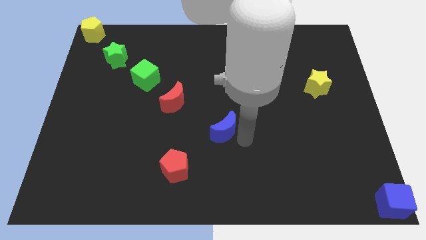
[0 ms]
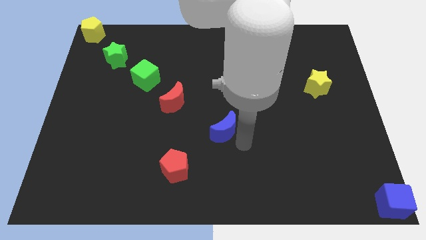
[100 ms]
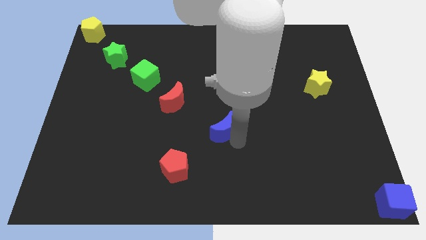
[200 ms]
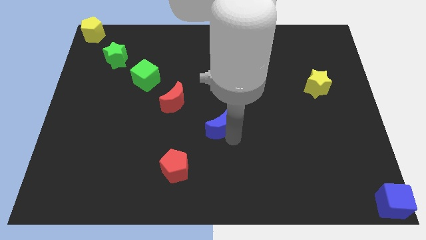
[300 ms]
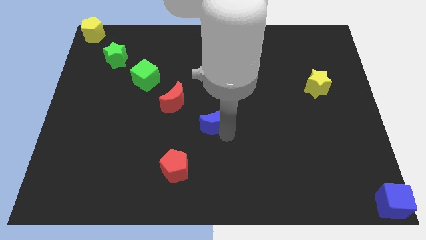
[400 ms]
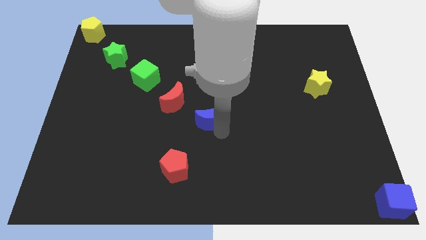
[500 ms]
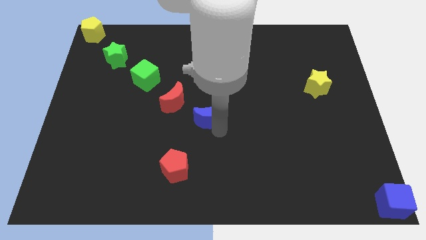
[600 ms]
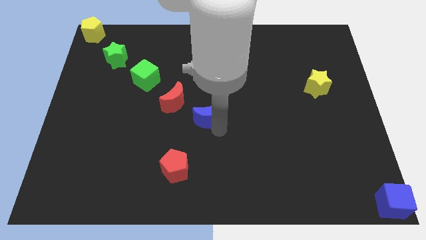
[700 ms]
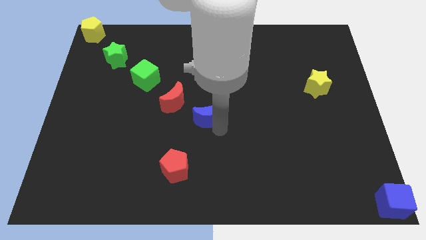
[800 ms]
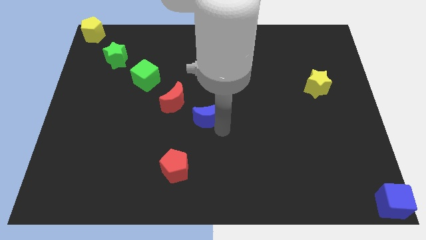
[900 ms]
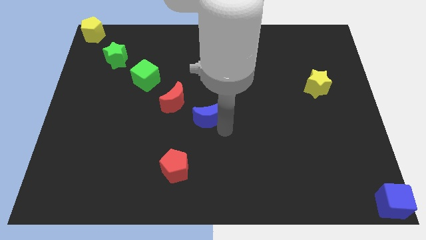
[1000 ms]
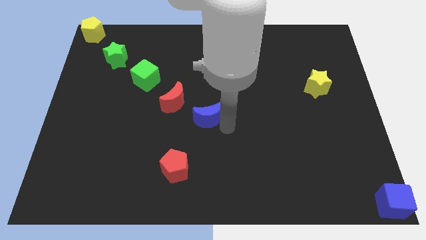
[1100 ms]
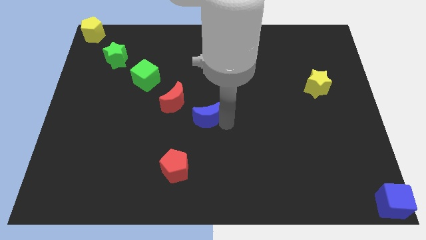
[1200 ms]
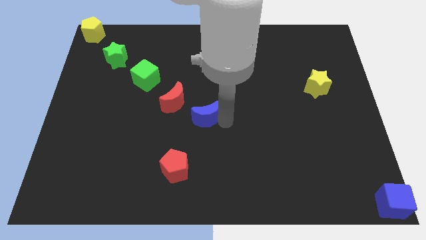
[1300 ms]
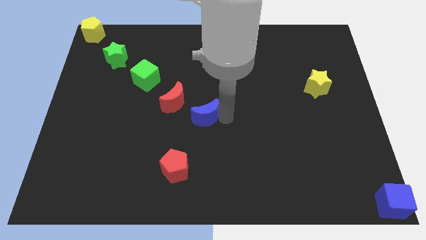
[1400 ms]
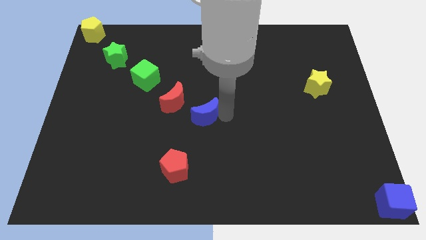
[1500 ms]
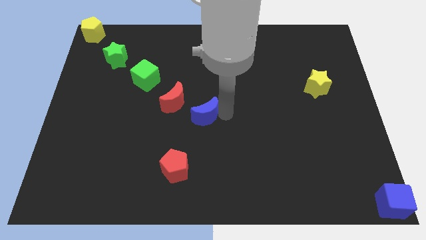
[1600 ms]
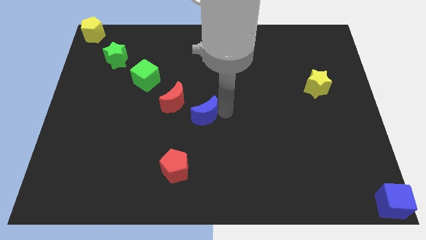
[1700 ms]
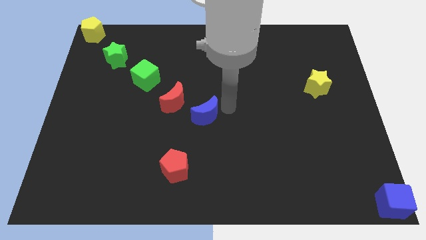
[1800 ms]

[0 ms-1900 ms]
push the blue moon towards the right side of the red moon

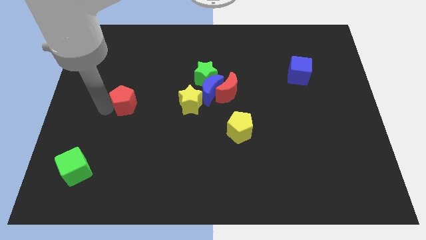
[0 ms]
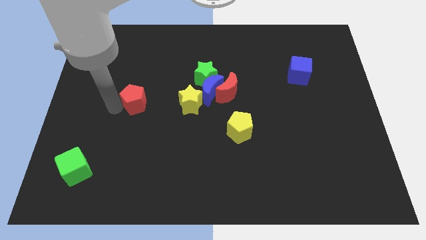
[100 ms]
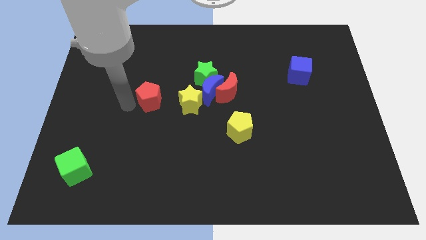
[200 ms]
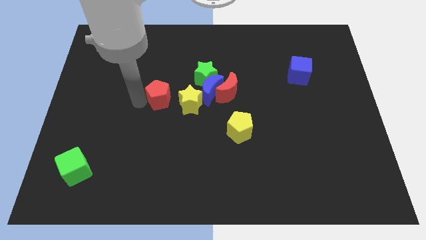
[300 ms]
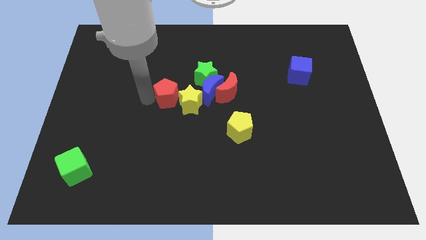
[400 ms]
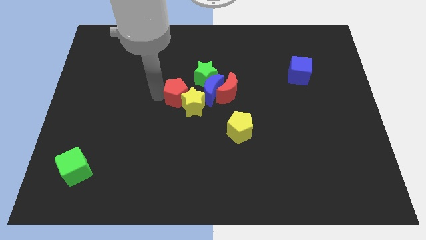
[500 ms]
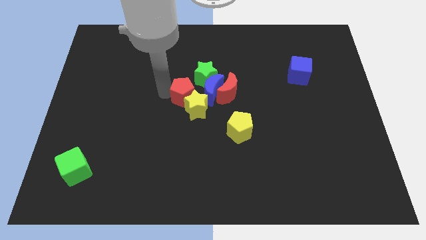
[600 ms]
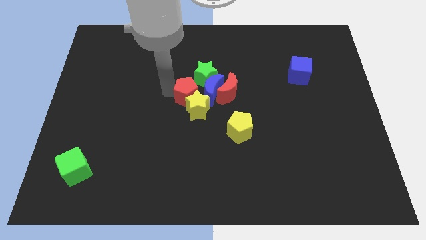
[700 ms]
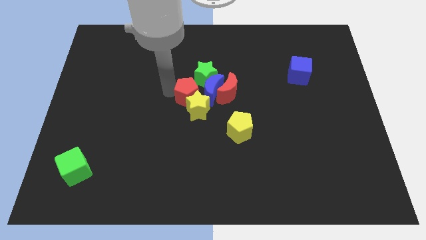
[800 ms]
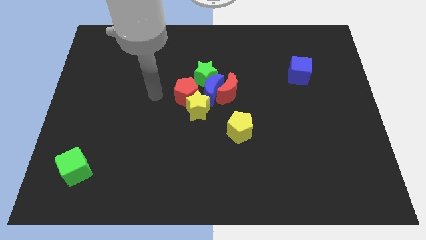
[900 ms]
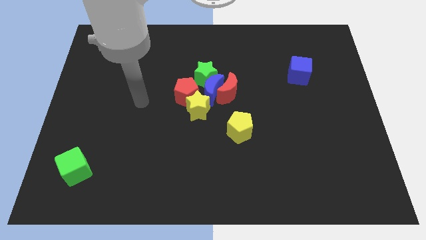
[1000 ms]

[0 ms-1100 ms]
push the red pentagon into the group of blocks

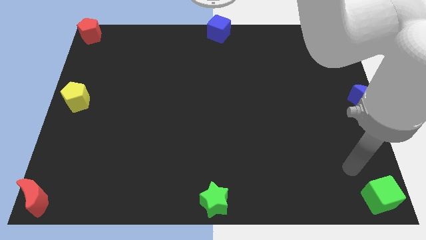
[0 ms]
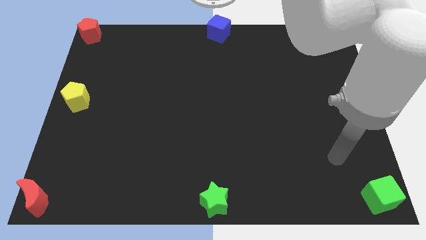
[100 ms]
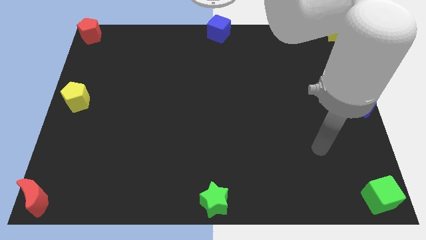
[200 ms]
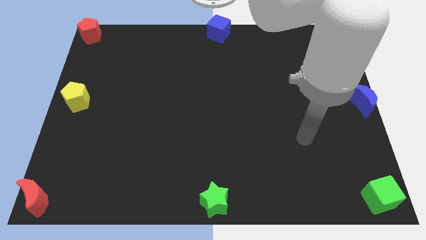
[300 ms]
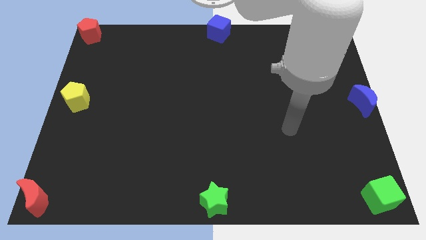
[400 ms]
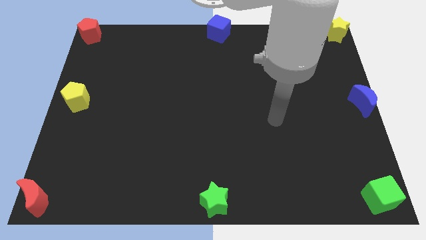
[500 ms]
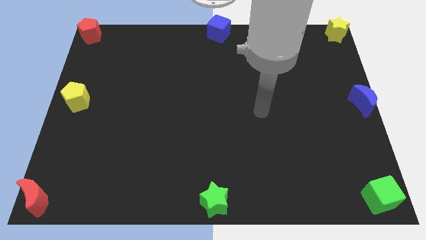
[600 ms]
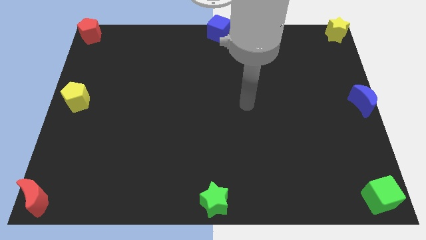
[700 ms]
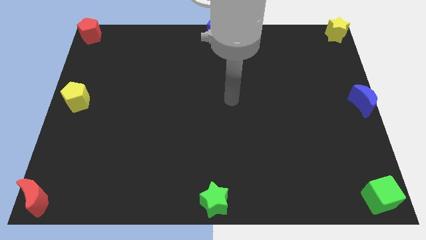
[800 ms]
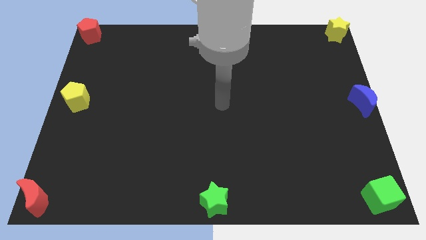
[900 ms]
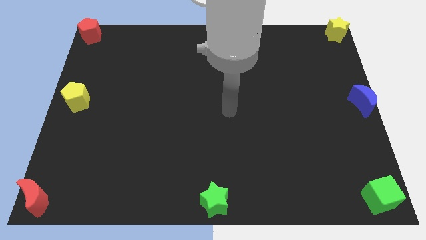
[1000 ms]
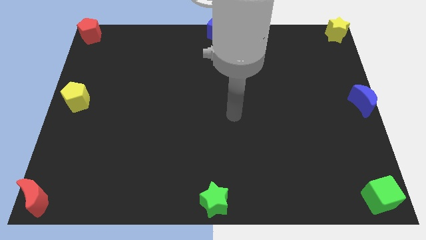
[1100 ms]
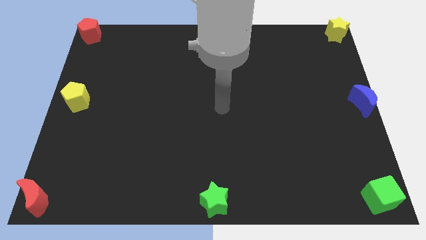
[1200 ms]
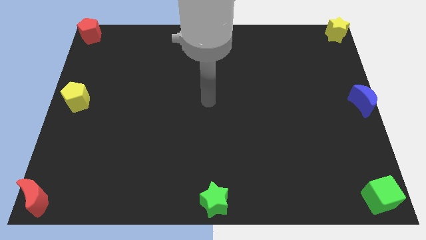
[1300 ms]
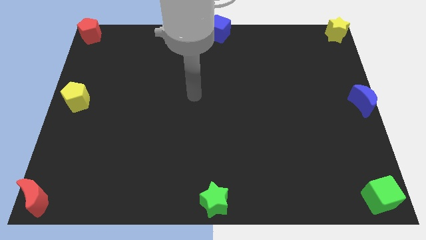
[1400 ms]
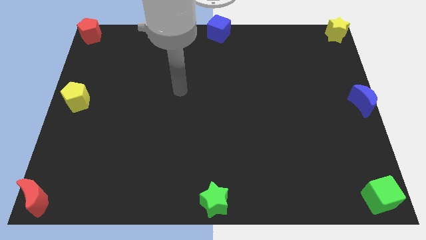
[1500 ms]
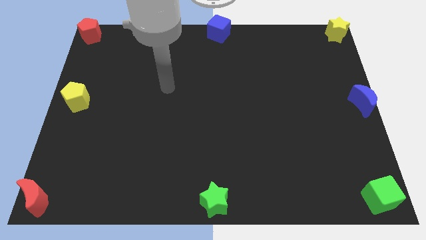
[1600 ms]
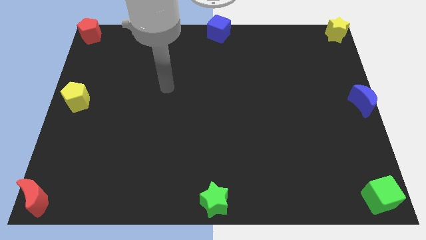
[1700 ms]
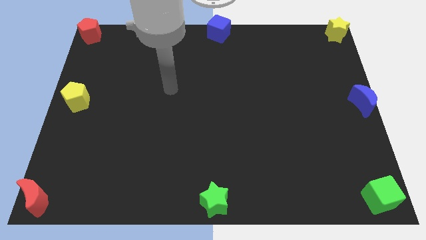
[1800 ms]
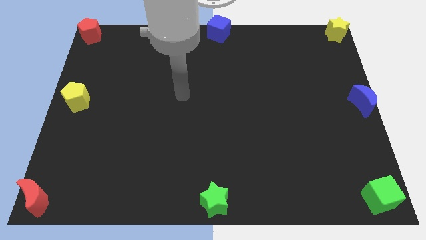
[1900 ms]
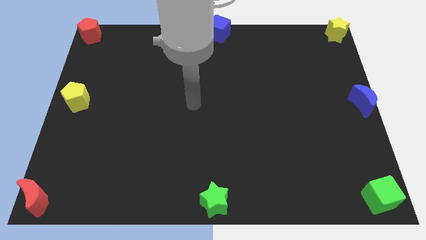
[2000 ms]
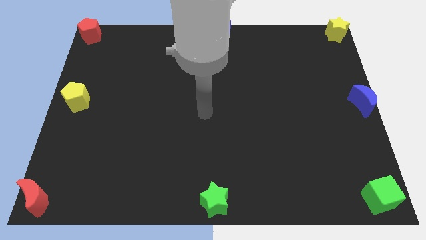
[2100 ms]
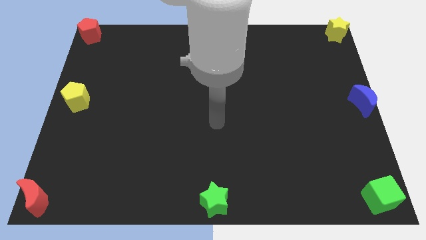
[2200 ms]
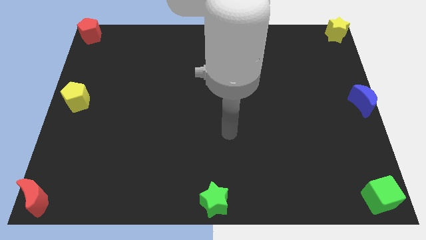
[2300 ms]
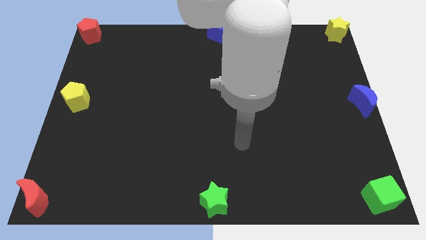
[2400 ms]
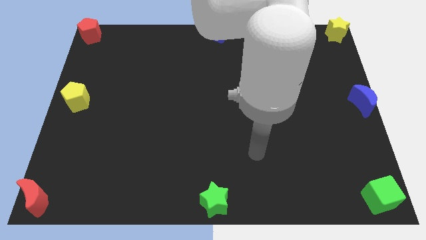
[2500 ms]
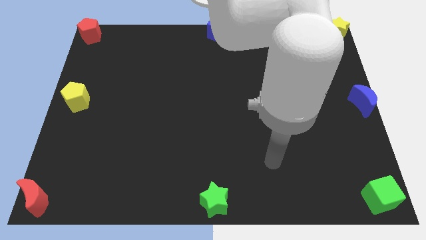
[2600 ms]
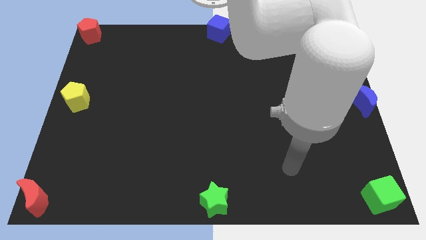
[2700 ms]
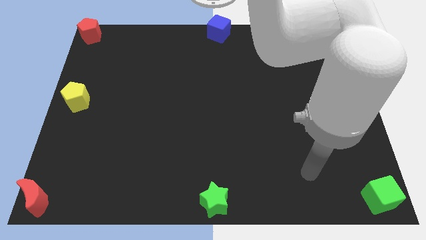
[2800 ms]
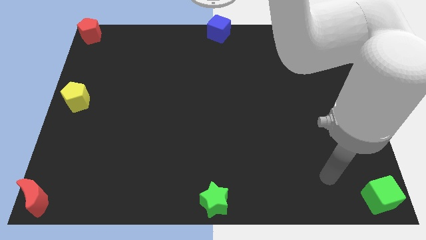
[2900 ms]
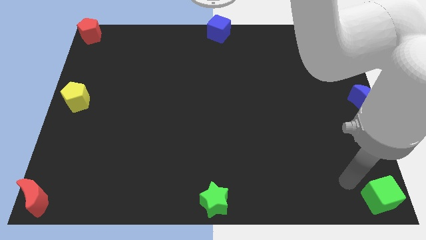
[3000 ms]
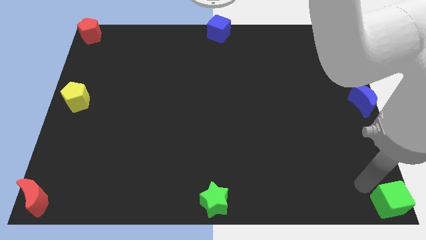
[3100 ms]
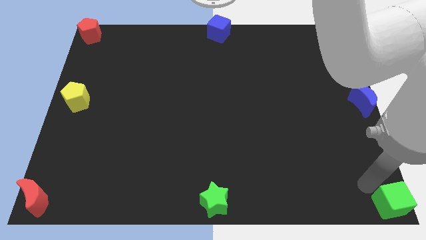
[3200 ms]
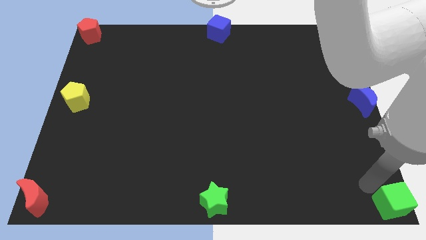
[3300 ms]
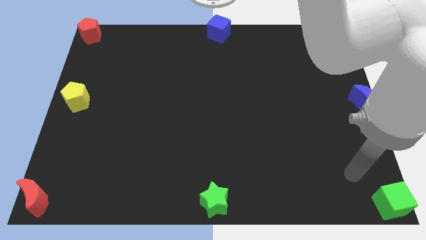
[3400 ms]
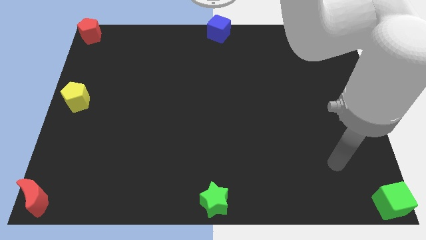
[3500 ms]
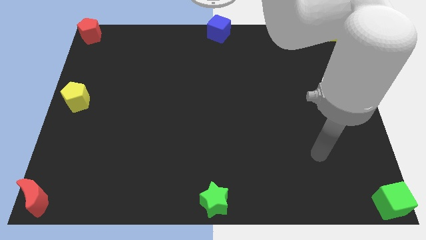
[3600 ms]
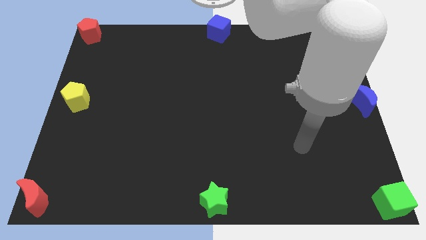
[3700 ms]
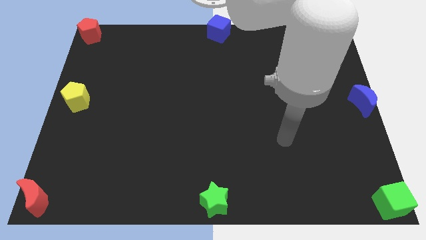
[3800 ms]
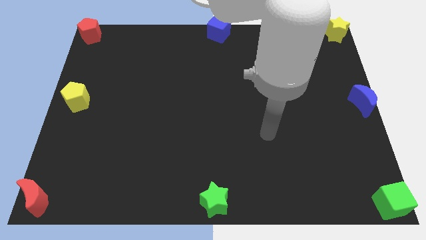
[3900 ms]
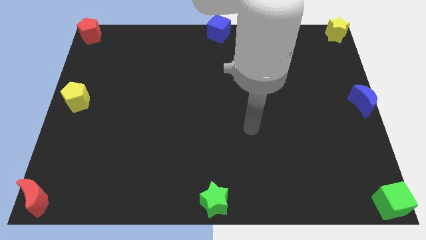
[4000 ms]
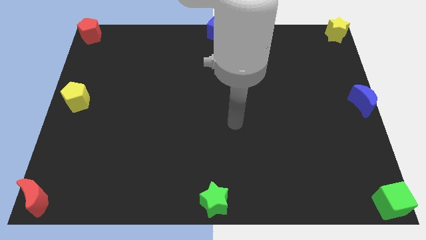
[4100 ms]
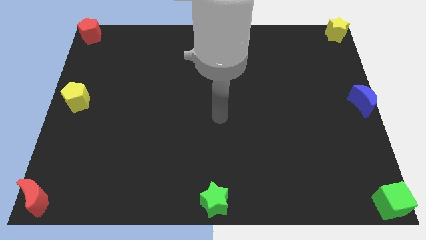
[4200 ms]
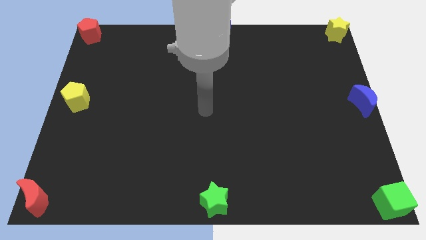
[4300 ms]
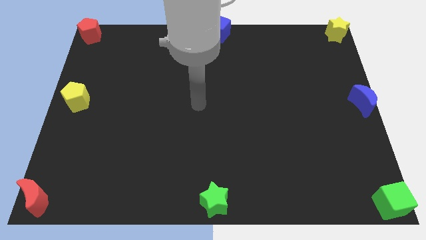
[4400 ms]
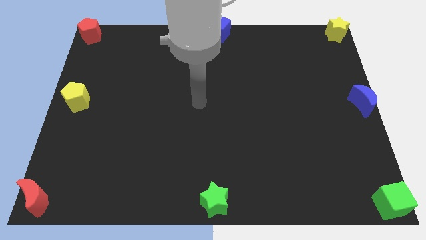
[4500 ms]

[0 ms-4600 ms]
move your arm to the center

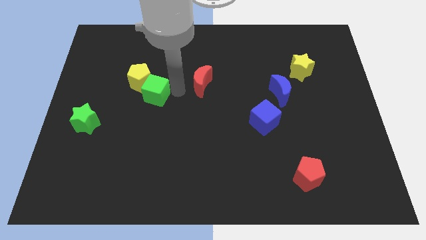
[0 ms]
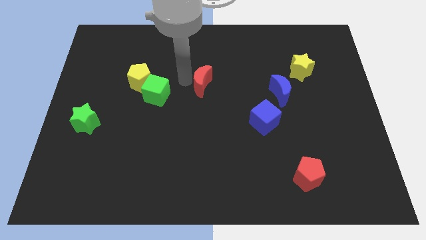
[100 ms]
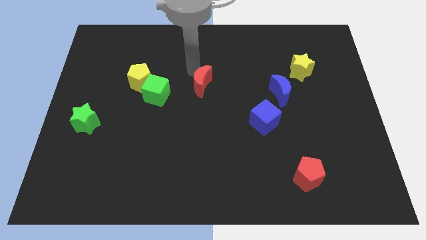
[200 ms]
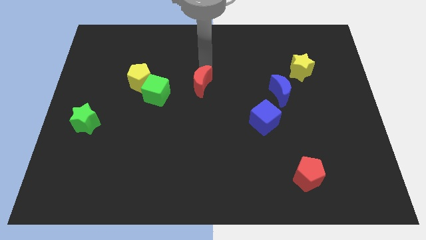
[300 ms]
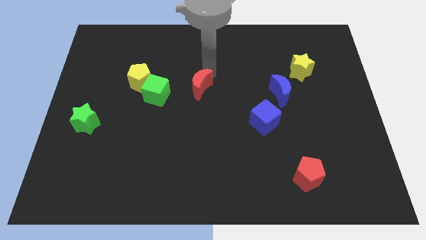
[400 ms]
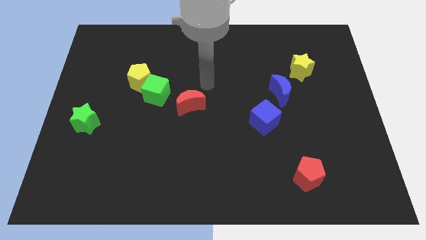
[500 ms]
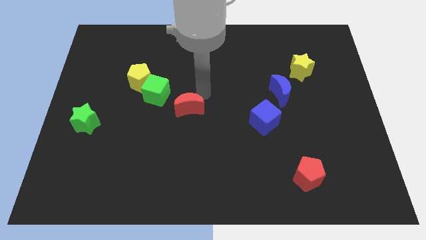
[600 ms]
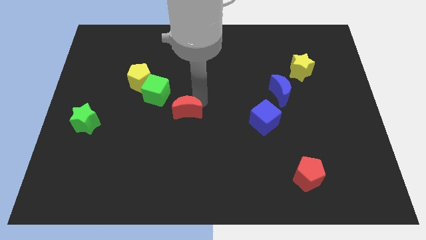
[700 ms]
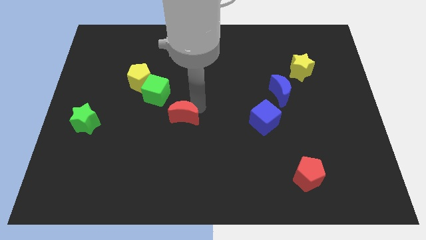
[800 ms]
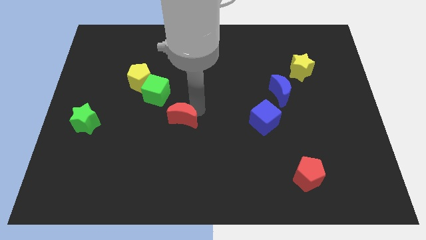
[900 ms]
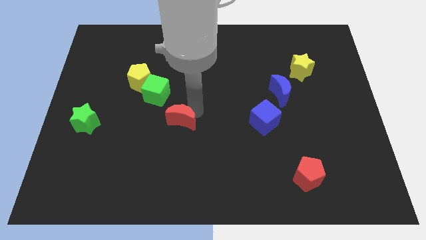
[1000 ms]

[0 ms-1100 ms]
place red moon diagonally bottom right of green cube

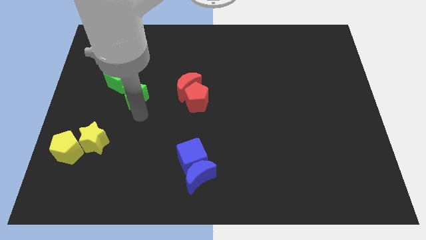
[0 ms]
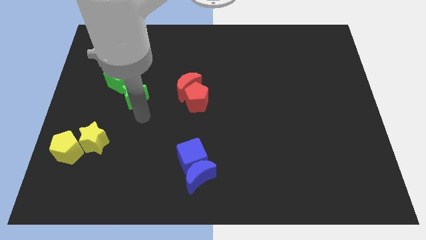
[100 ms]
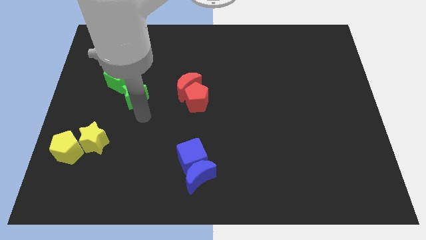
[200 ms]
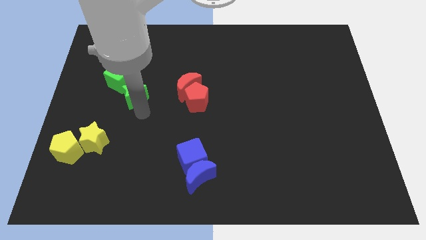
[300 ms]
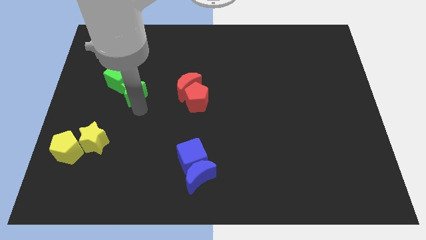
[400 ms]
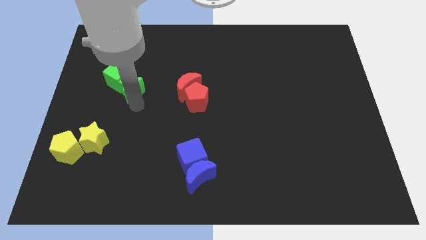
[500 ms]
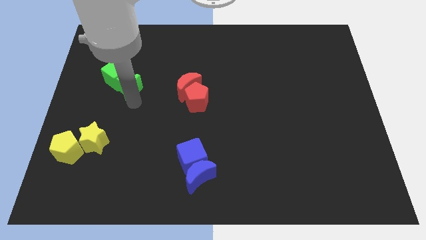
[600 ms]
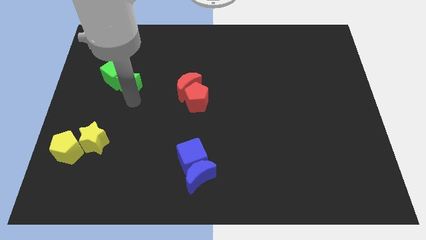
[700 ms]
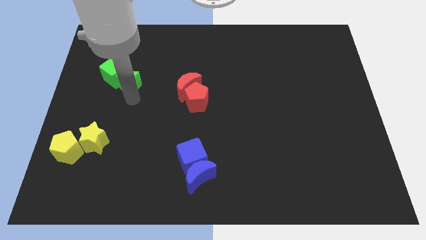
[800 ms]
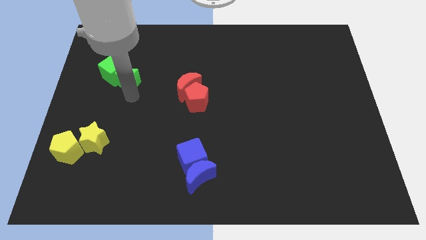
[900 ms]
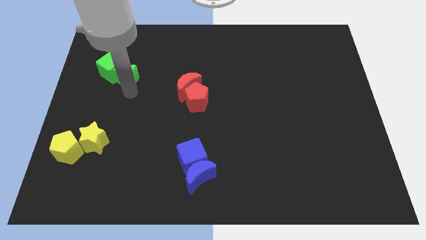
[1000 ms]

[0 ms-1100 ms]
move the green star into the green cube
